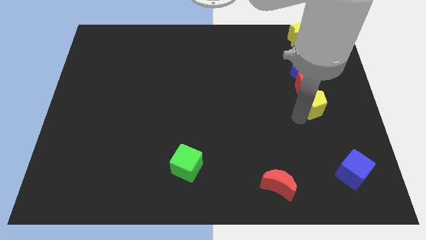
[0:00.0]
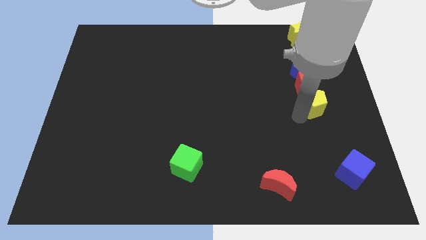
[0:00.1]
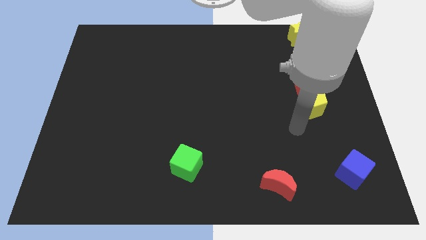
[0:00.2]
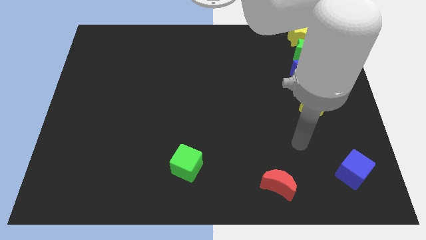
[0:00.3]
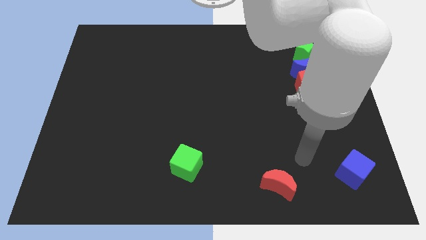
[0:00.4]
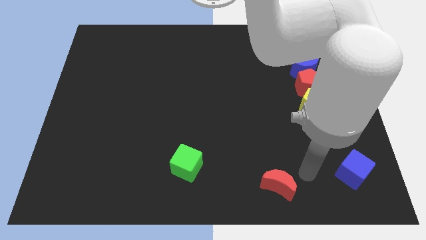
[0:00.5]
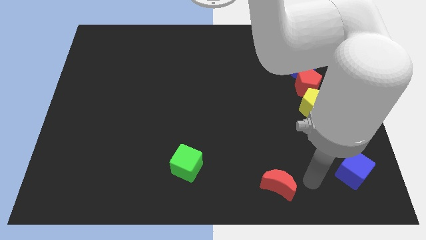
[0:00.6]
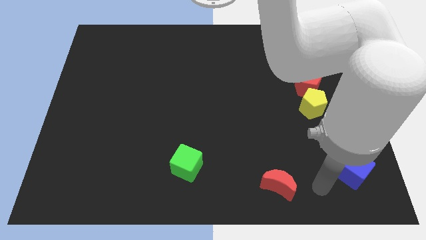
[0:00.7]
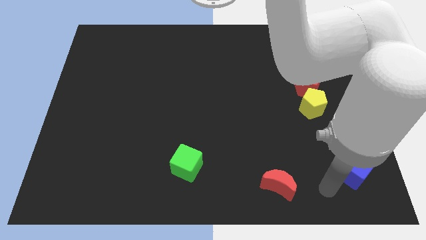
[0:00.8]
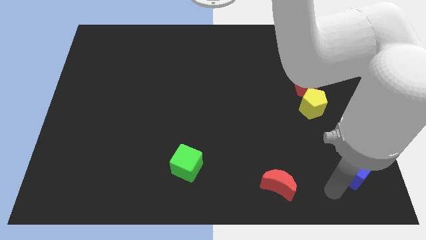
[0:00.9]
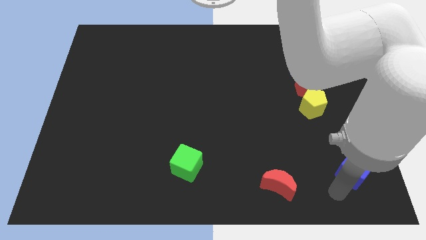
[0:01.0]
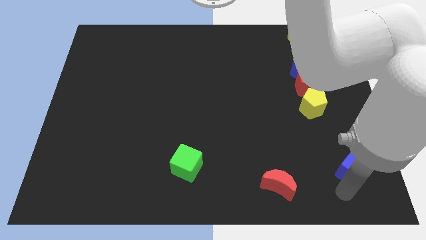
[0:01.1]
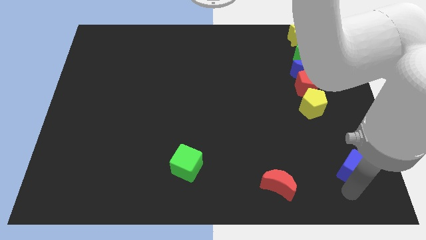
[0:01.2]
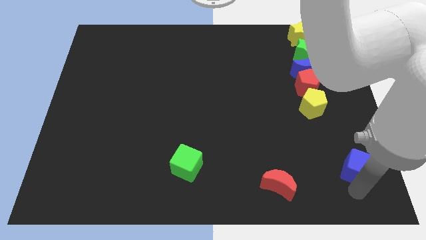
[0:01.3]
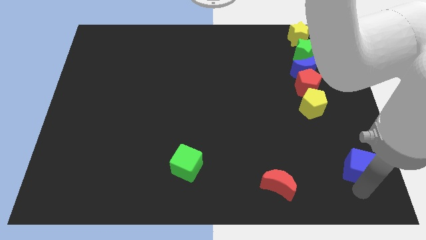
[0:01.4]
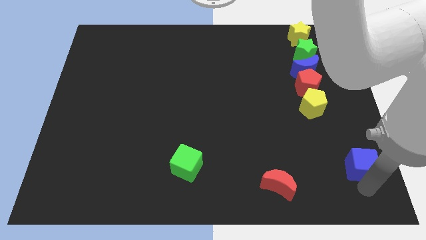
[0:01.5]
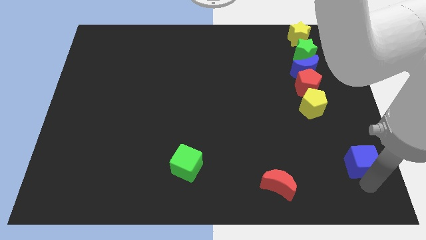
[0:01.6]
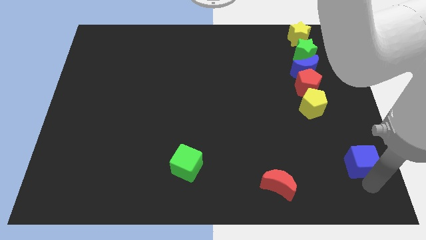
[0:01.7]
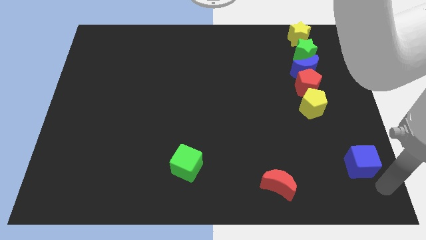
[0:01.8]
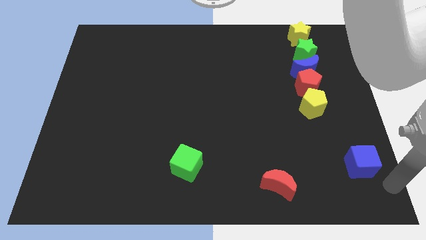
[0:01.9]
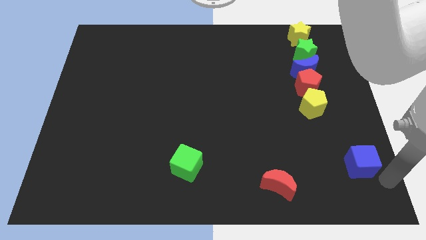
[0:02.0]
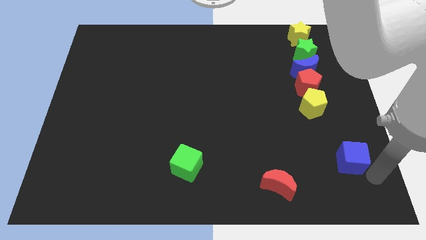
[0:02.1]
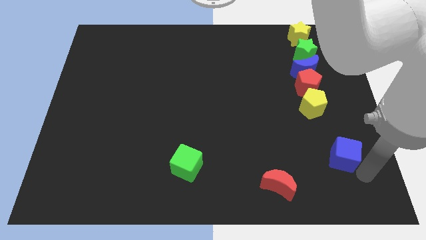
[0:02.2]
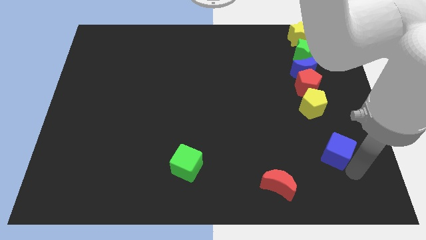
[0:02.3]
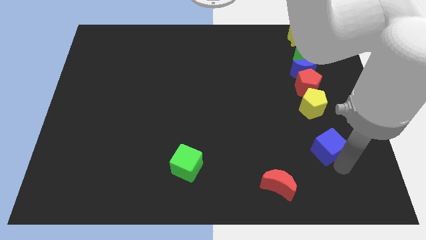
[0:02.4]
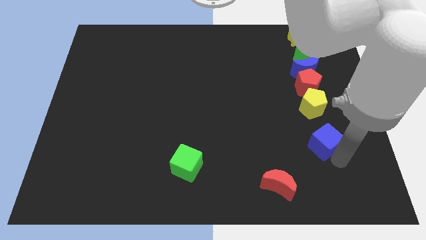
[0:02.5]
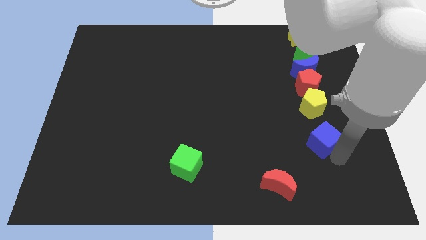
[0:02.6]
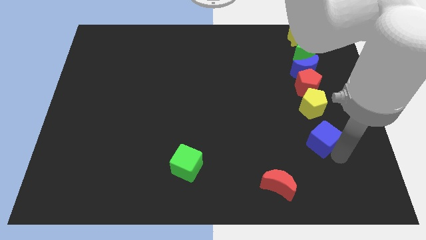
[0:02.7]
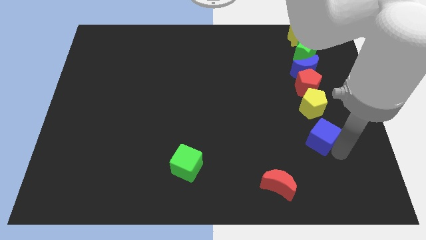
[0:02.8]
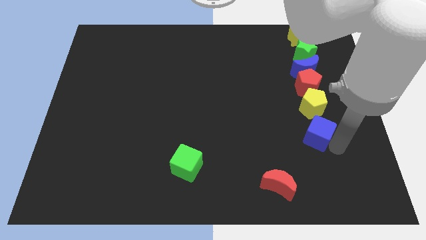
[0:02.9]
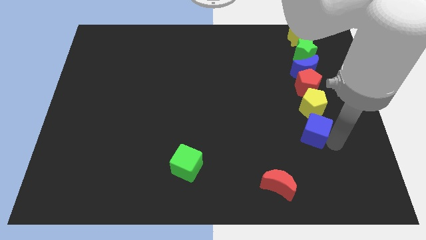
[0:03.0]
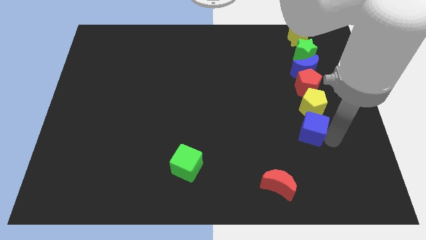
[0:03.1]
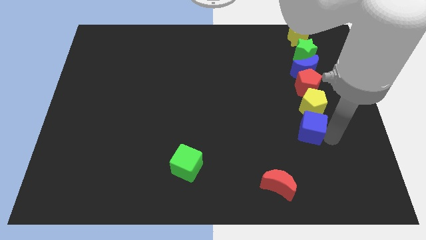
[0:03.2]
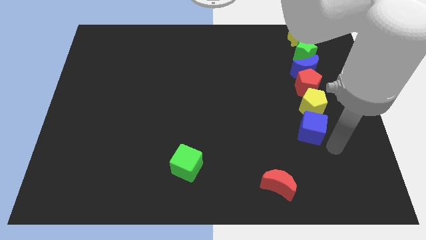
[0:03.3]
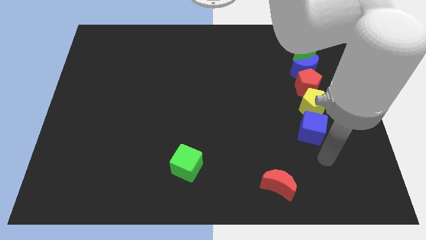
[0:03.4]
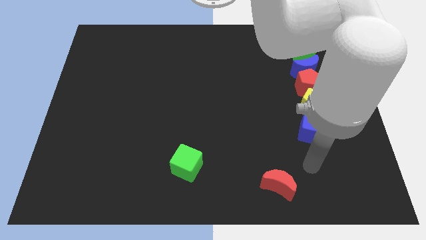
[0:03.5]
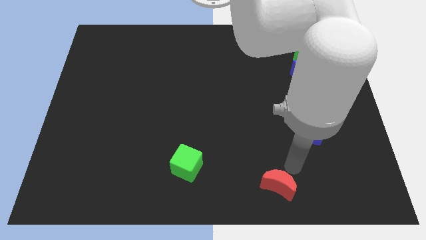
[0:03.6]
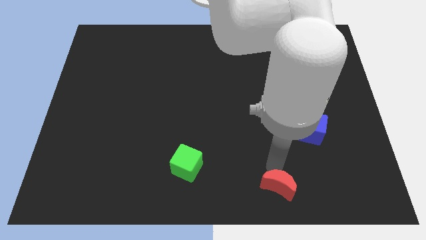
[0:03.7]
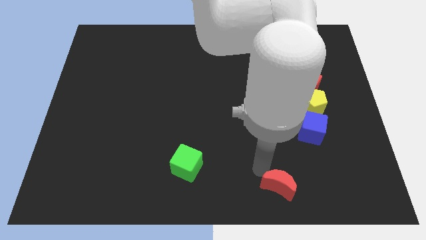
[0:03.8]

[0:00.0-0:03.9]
push the blue cube upward

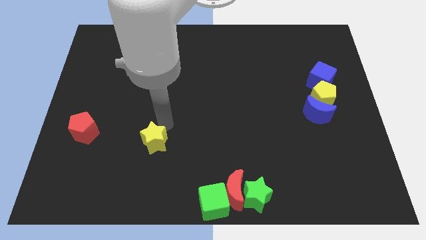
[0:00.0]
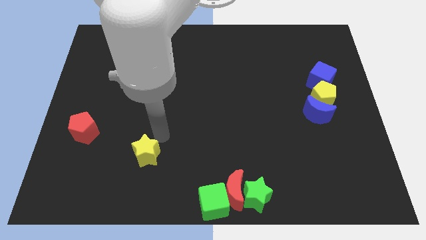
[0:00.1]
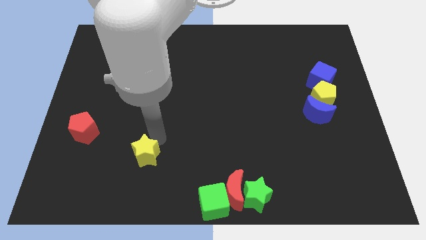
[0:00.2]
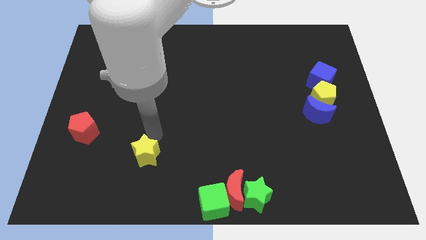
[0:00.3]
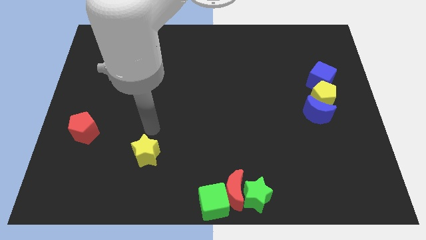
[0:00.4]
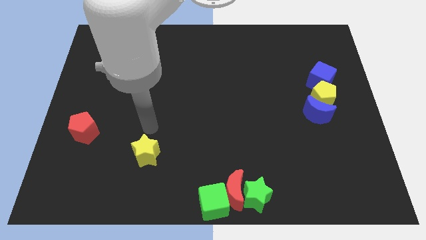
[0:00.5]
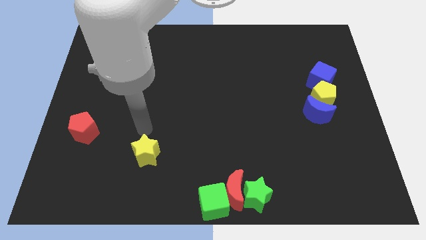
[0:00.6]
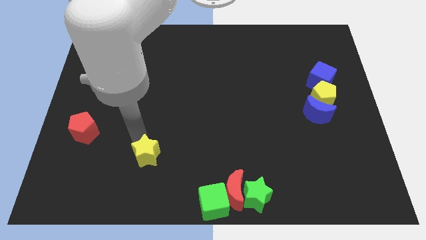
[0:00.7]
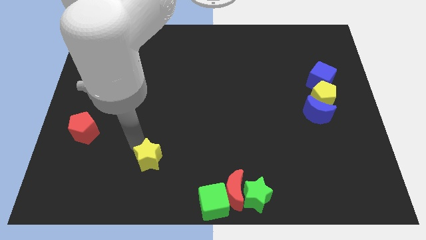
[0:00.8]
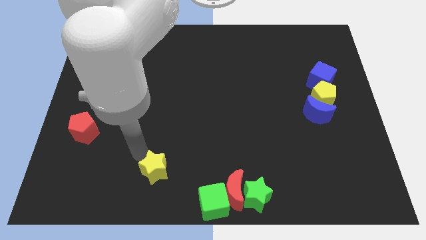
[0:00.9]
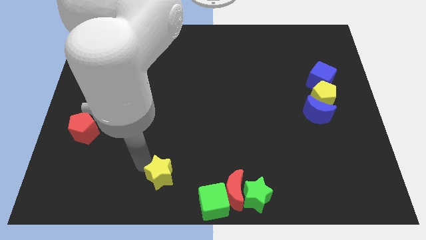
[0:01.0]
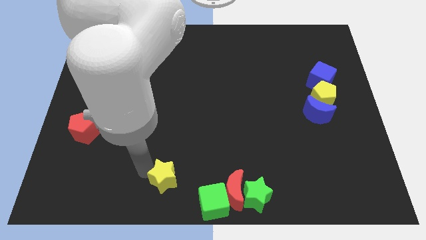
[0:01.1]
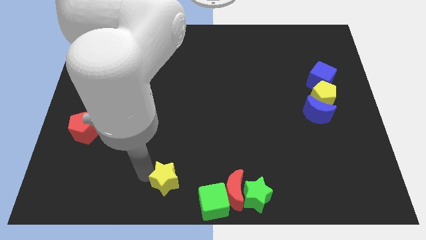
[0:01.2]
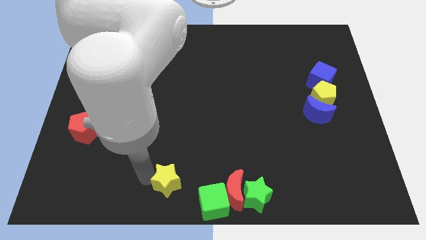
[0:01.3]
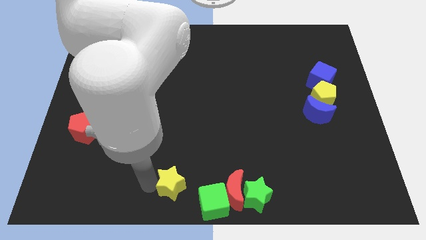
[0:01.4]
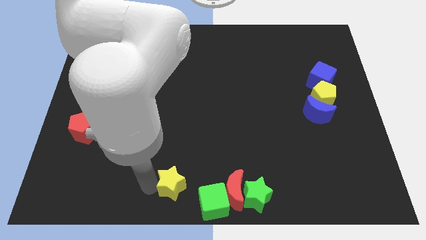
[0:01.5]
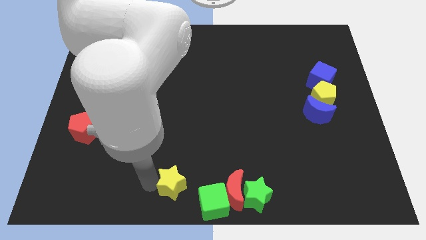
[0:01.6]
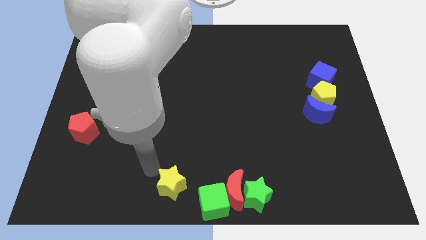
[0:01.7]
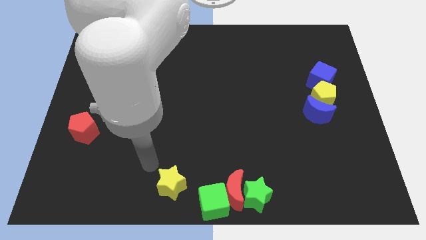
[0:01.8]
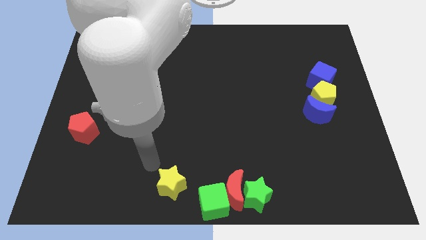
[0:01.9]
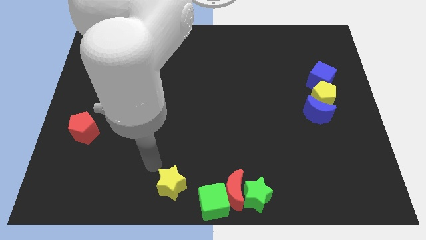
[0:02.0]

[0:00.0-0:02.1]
drag the yellow star towards the green cube

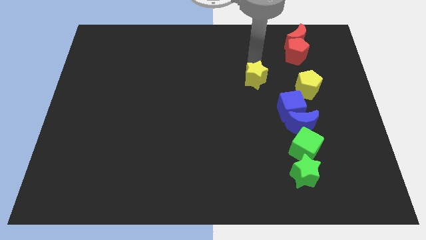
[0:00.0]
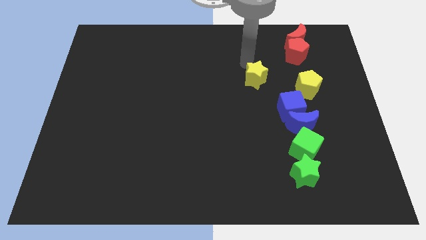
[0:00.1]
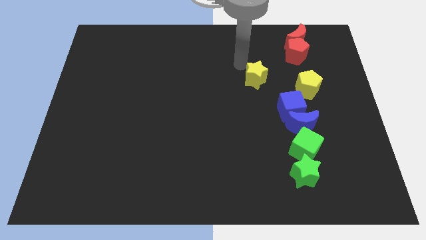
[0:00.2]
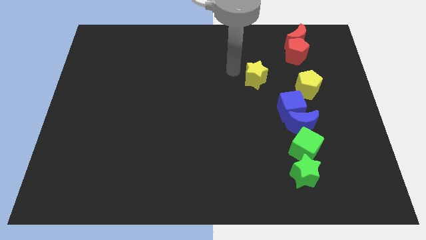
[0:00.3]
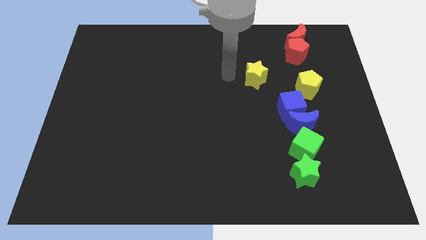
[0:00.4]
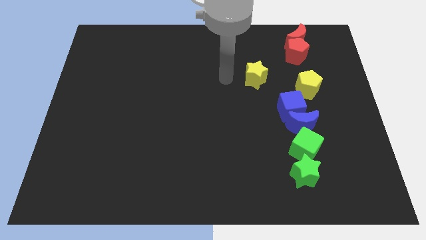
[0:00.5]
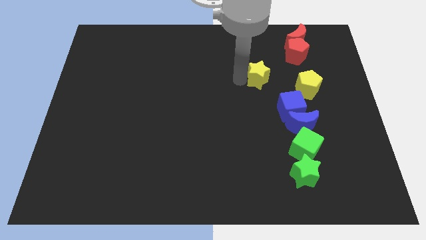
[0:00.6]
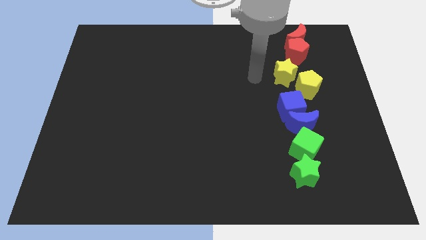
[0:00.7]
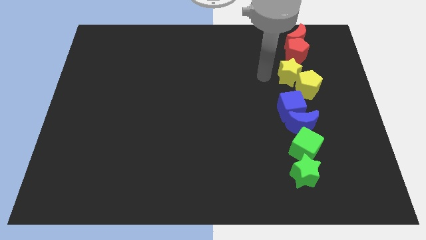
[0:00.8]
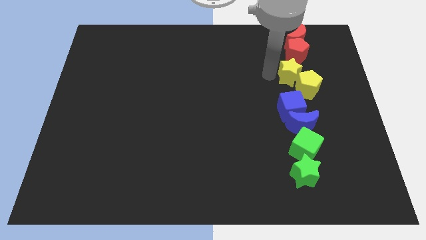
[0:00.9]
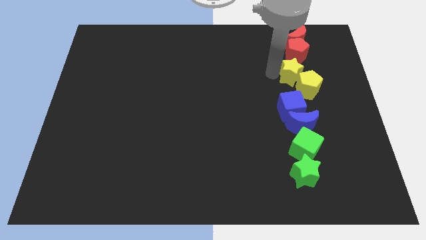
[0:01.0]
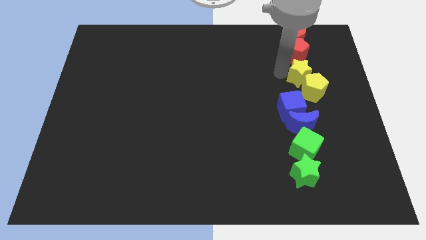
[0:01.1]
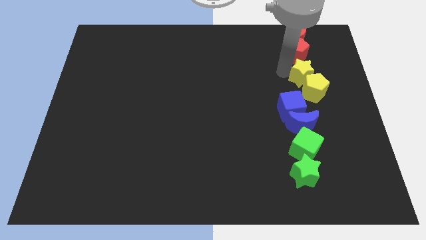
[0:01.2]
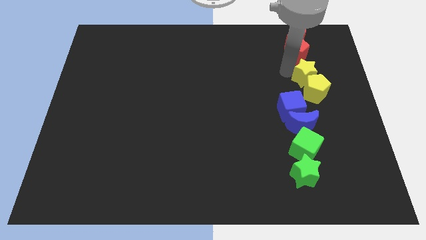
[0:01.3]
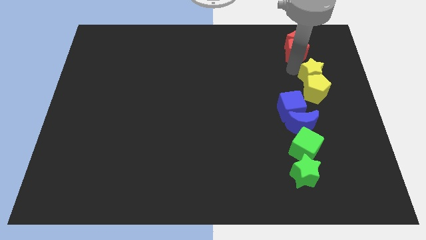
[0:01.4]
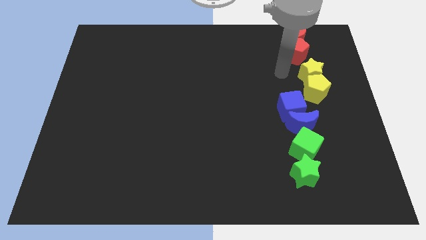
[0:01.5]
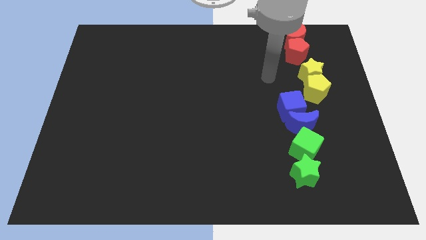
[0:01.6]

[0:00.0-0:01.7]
push yellow star into the yellow pentagon

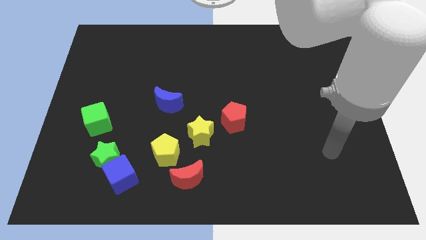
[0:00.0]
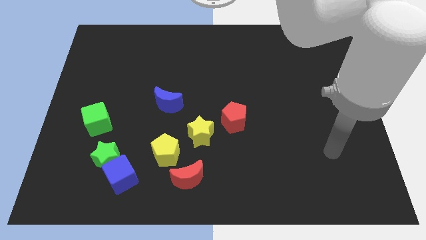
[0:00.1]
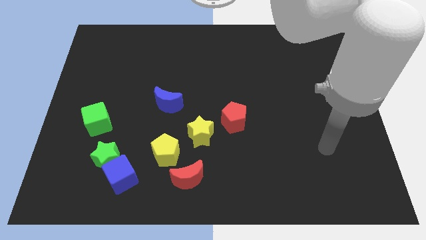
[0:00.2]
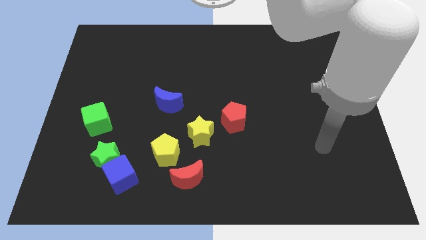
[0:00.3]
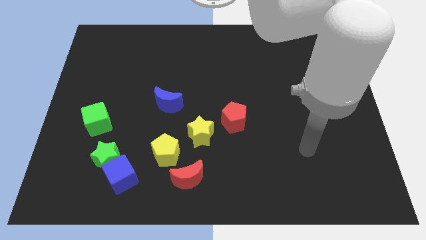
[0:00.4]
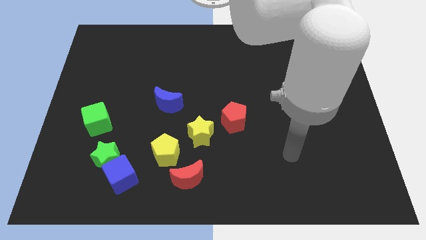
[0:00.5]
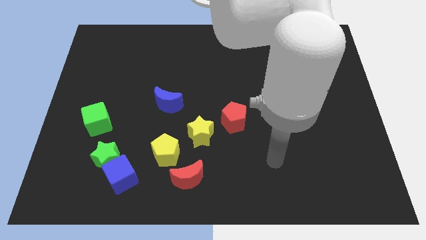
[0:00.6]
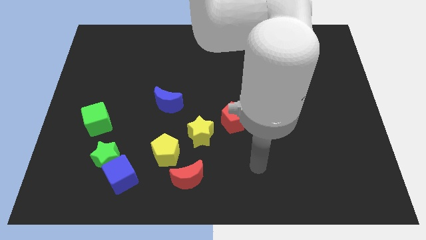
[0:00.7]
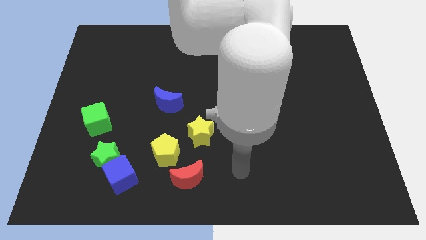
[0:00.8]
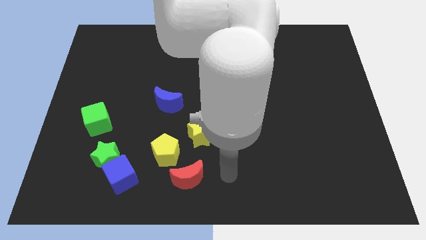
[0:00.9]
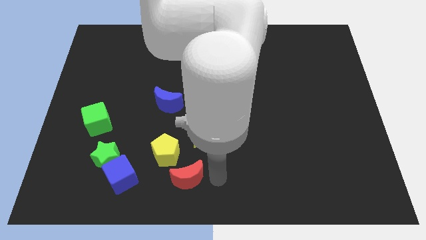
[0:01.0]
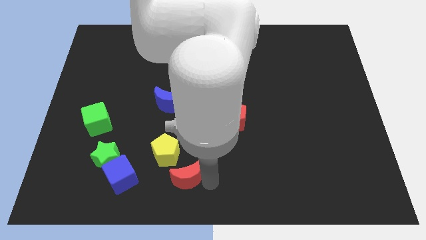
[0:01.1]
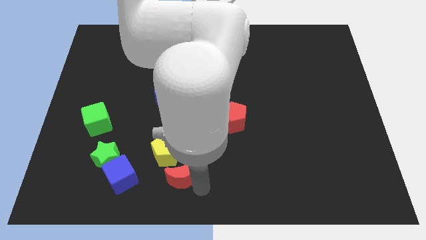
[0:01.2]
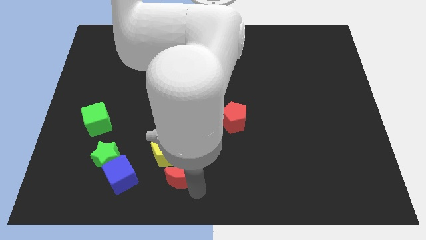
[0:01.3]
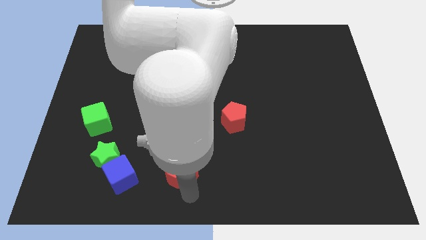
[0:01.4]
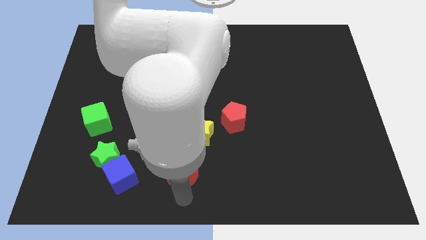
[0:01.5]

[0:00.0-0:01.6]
place the arm below the red pentagon
